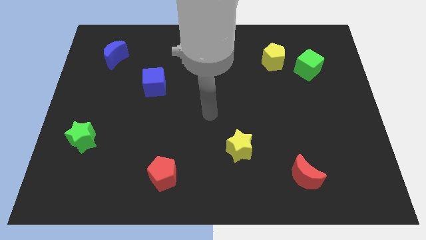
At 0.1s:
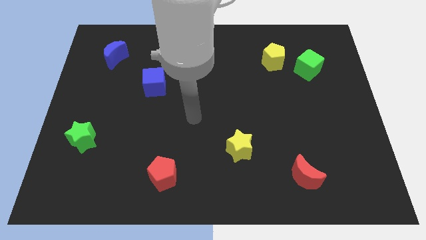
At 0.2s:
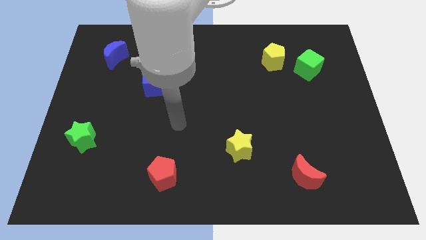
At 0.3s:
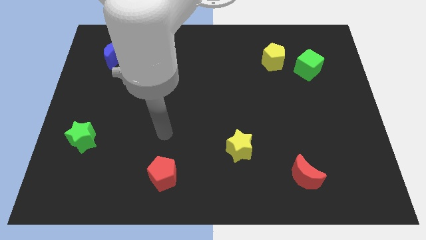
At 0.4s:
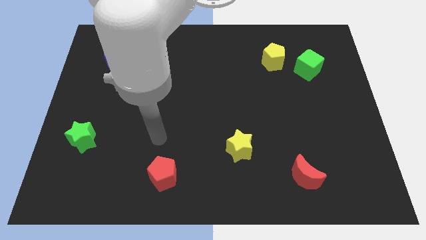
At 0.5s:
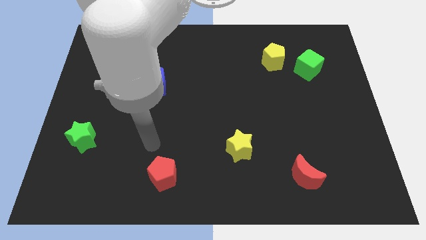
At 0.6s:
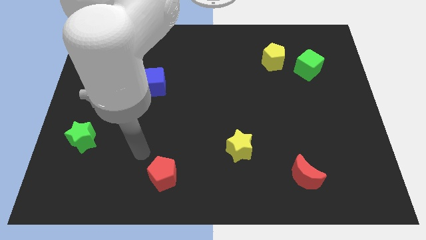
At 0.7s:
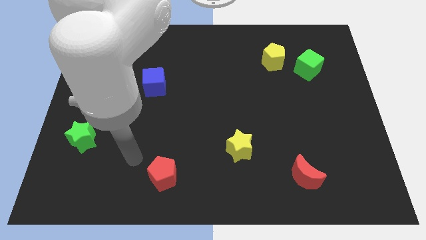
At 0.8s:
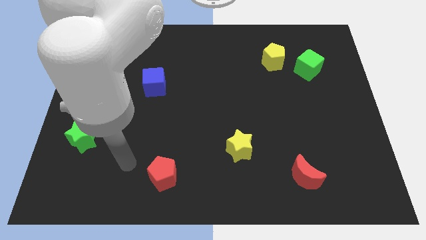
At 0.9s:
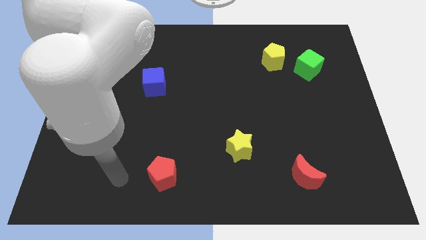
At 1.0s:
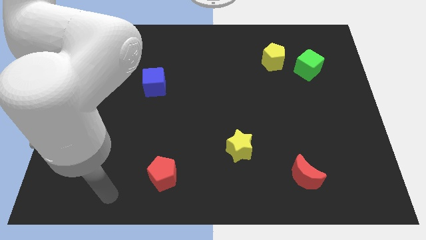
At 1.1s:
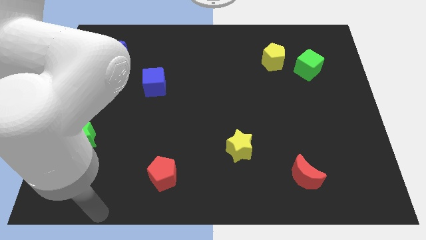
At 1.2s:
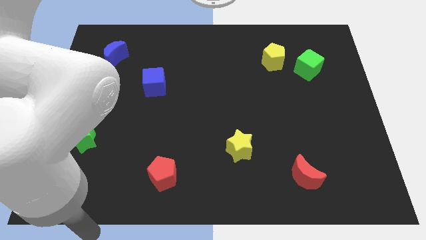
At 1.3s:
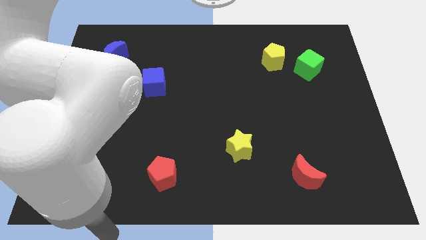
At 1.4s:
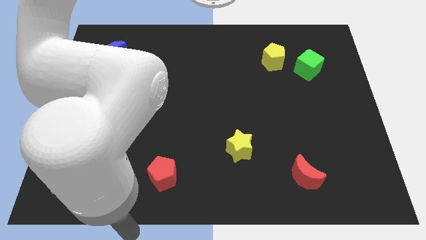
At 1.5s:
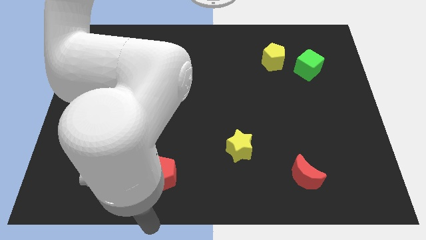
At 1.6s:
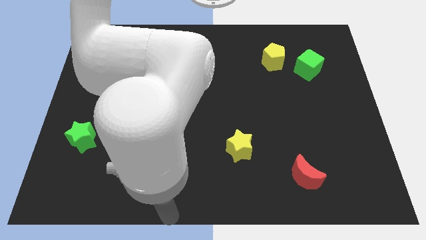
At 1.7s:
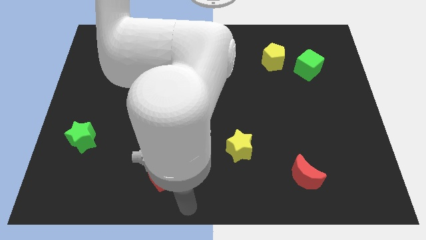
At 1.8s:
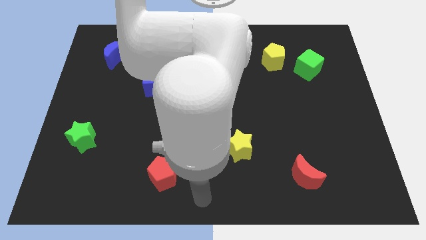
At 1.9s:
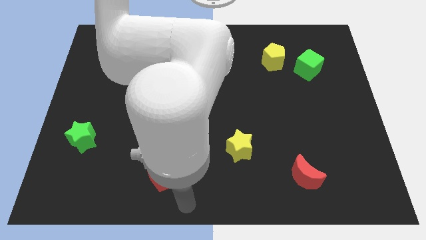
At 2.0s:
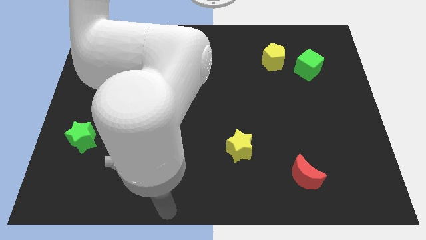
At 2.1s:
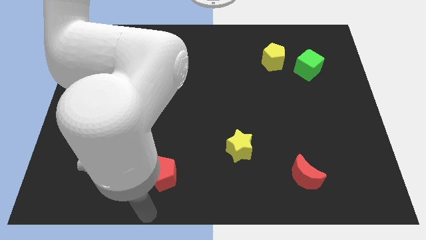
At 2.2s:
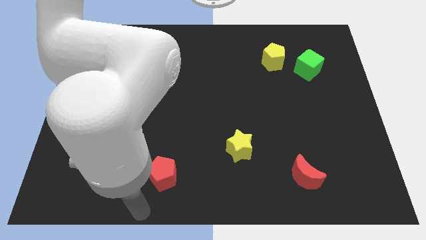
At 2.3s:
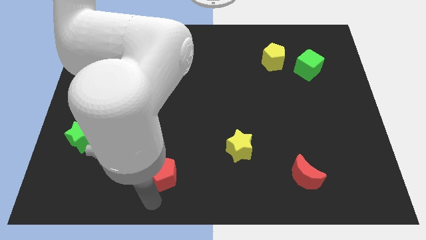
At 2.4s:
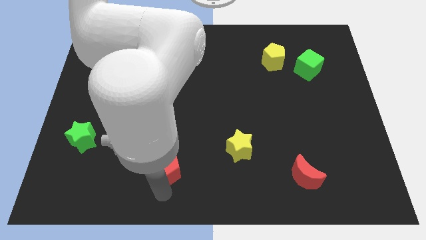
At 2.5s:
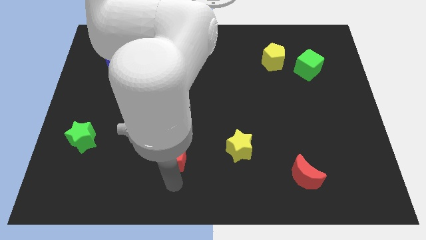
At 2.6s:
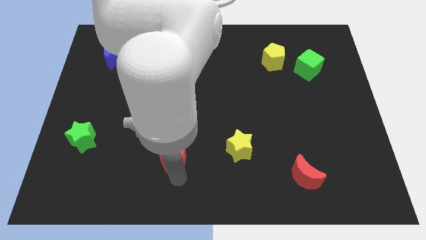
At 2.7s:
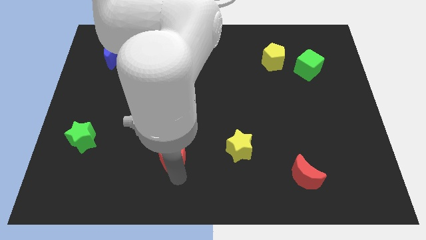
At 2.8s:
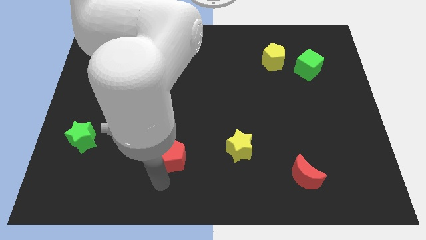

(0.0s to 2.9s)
move red pentagon slightly up

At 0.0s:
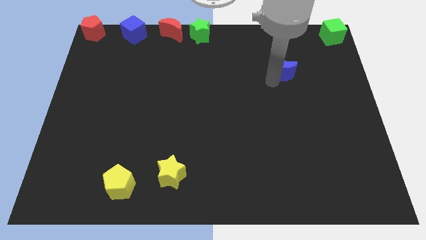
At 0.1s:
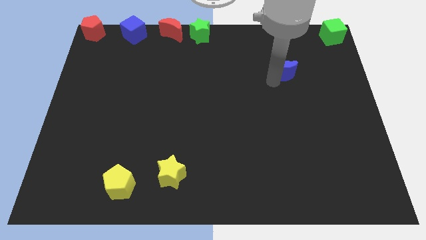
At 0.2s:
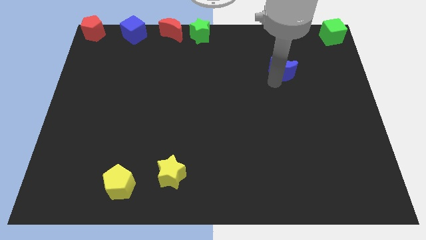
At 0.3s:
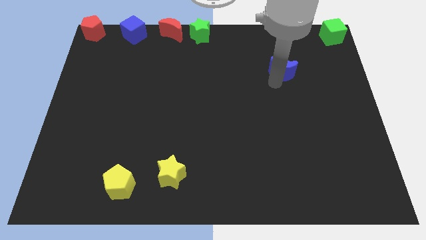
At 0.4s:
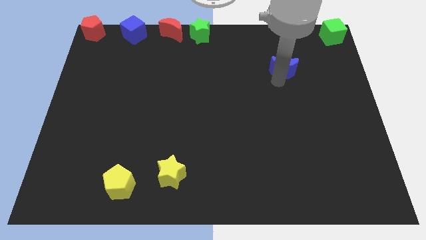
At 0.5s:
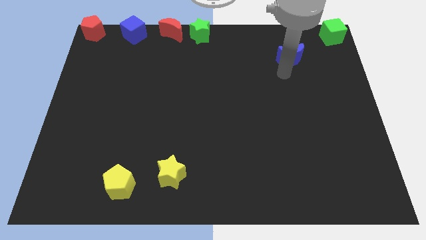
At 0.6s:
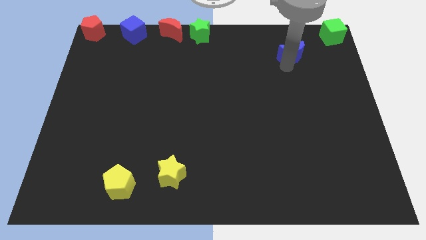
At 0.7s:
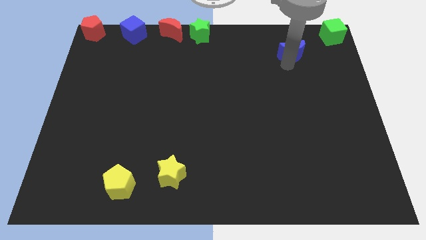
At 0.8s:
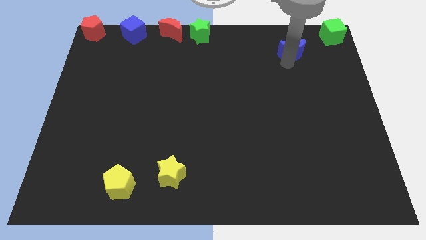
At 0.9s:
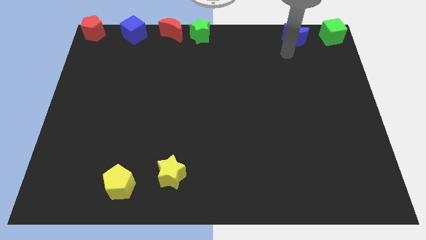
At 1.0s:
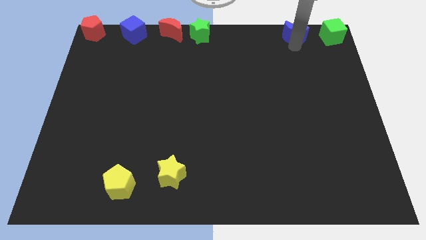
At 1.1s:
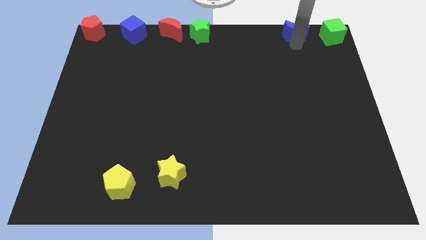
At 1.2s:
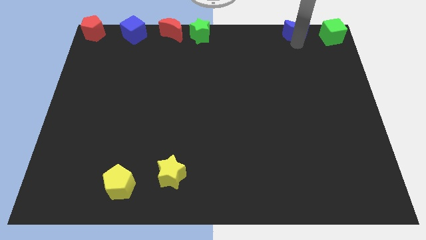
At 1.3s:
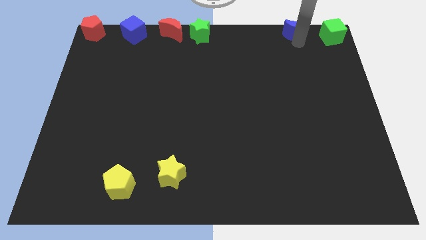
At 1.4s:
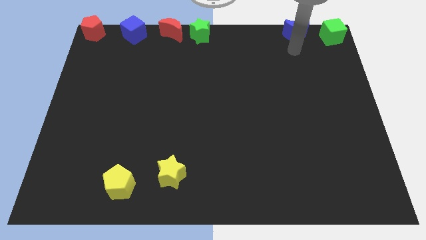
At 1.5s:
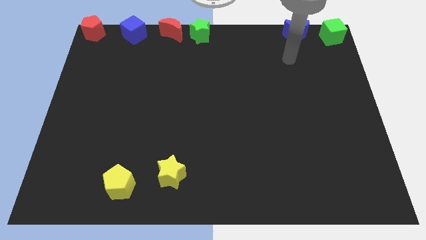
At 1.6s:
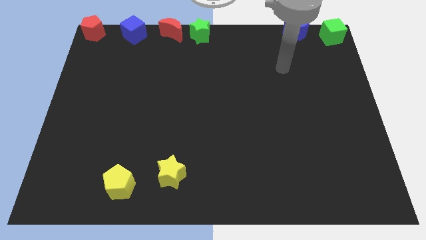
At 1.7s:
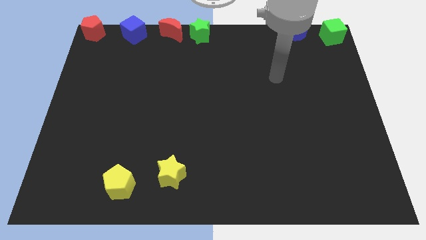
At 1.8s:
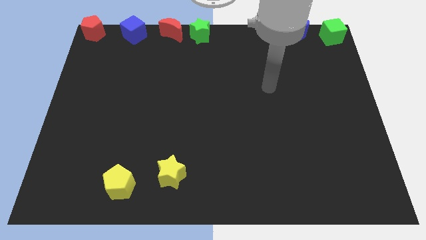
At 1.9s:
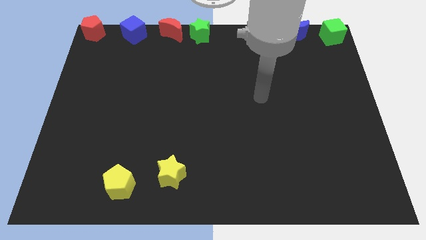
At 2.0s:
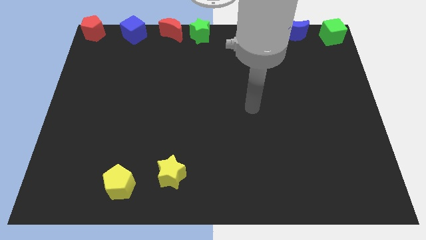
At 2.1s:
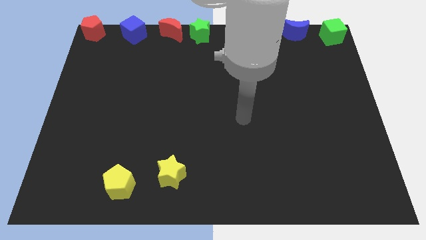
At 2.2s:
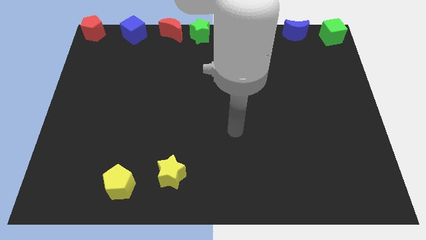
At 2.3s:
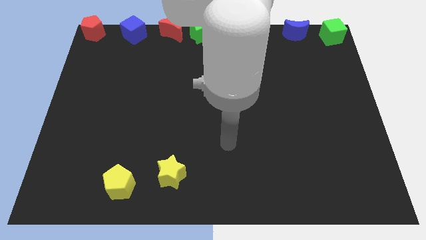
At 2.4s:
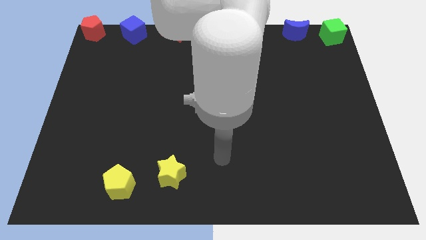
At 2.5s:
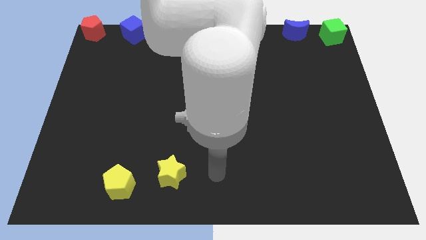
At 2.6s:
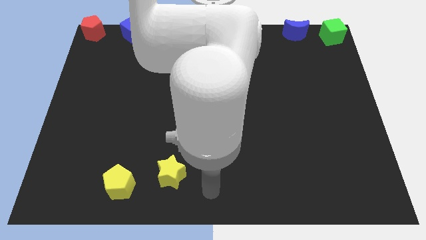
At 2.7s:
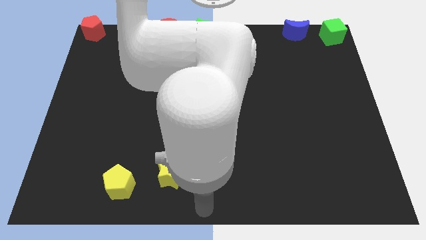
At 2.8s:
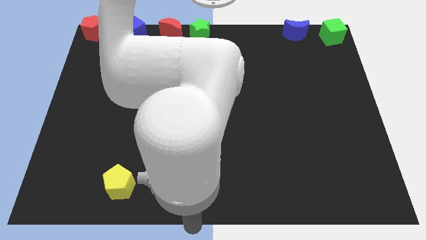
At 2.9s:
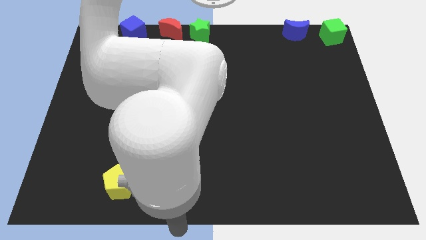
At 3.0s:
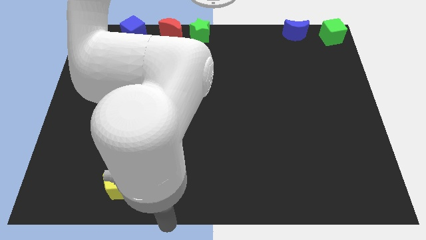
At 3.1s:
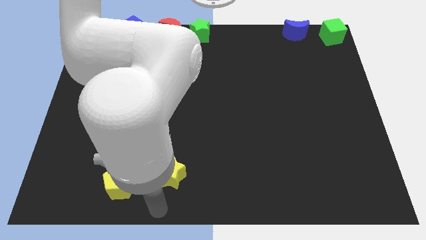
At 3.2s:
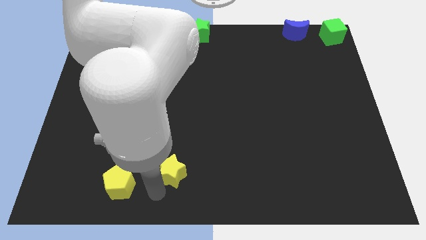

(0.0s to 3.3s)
put the blue moon to the left side of the green cube

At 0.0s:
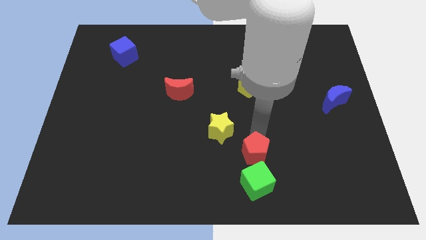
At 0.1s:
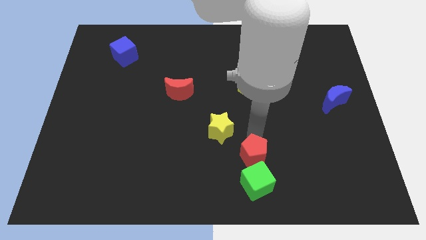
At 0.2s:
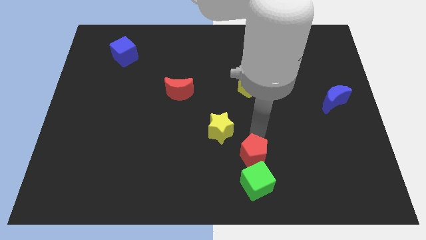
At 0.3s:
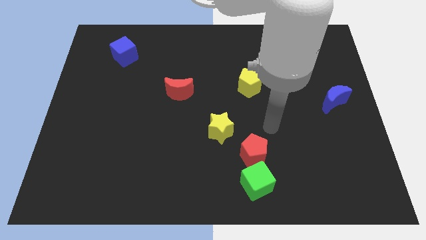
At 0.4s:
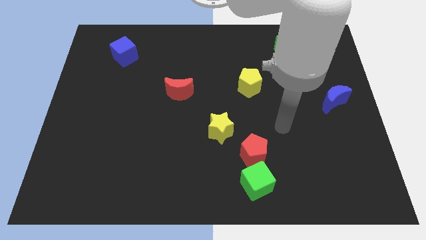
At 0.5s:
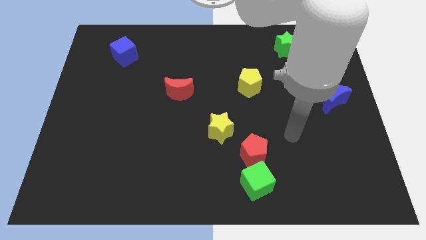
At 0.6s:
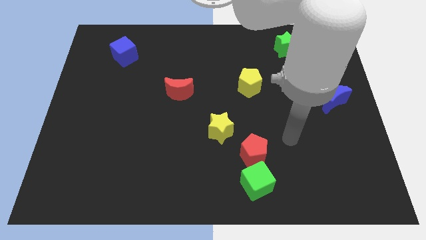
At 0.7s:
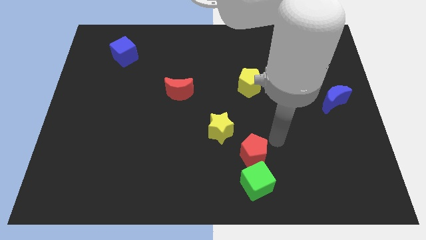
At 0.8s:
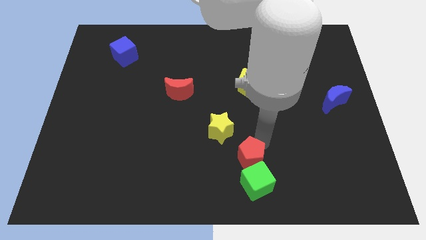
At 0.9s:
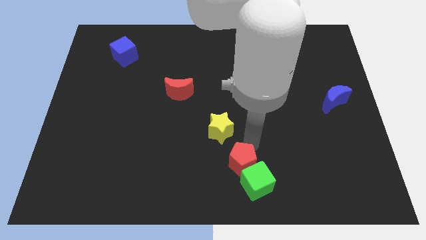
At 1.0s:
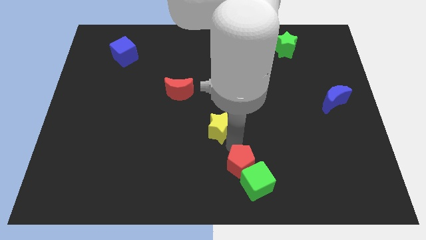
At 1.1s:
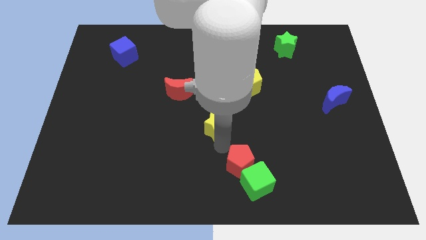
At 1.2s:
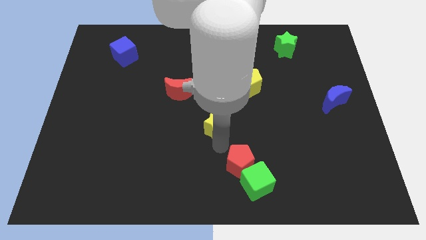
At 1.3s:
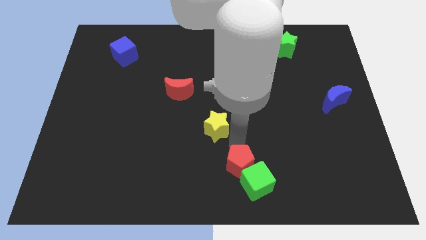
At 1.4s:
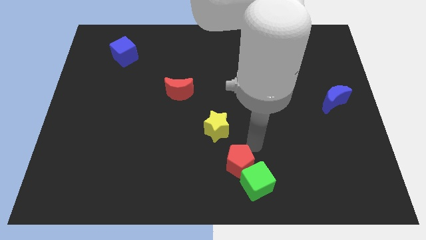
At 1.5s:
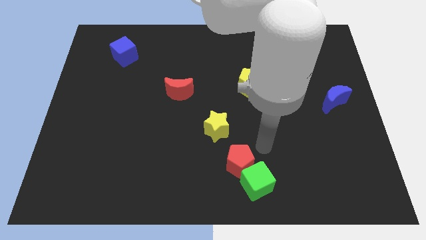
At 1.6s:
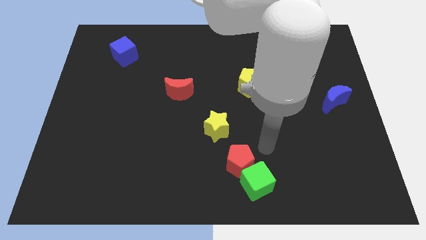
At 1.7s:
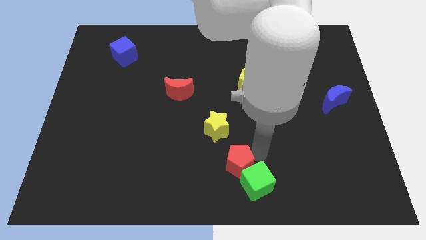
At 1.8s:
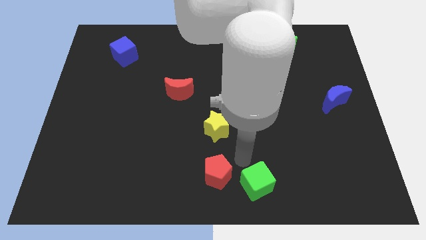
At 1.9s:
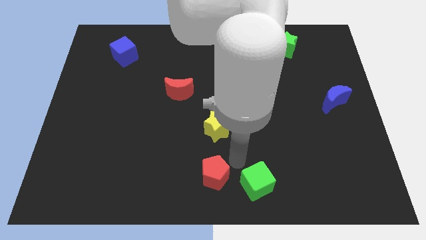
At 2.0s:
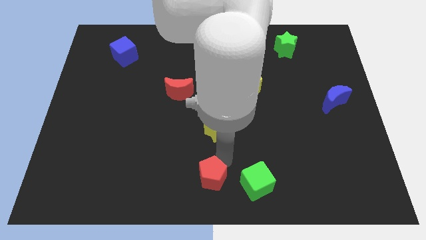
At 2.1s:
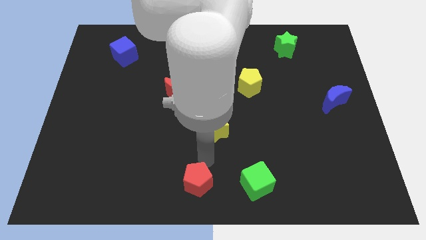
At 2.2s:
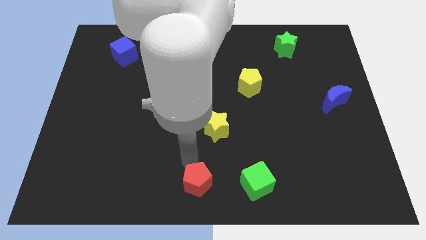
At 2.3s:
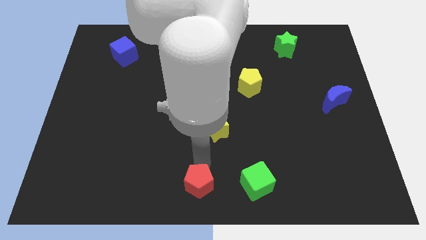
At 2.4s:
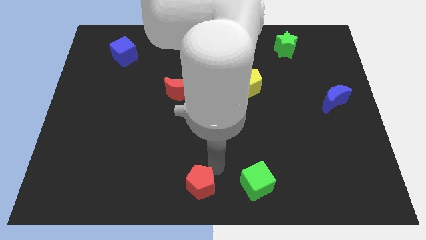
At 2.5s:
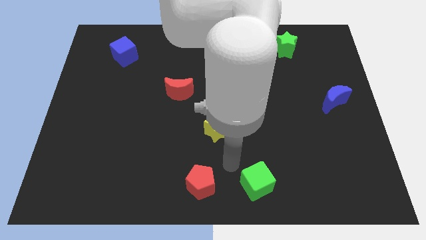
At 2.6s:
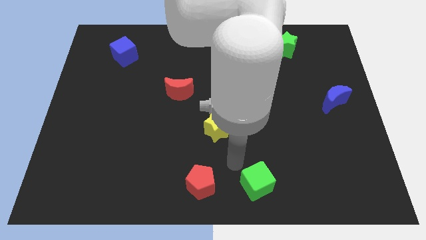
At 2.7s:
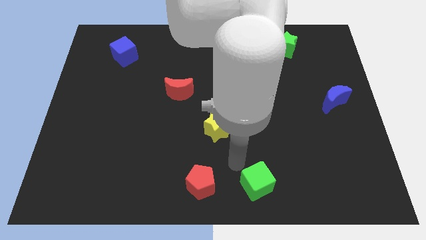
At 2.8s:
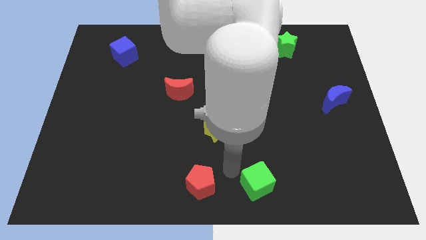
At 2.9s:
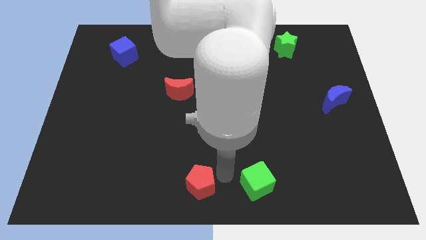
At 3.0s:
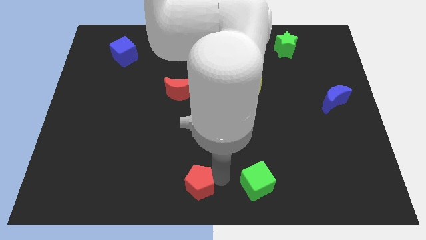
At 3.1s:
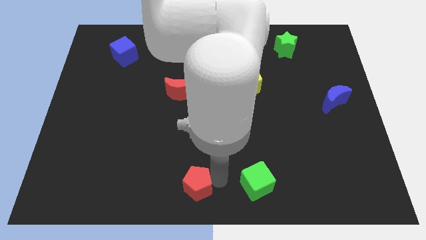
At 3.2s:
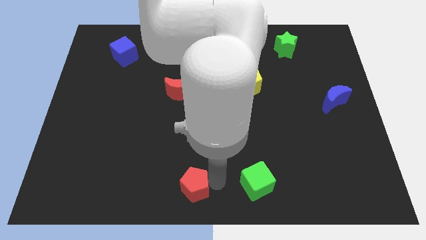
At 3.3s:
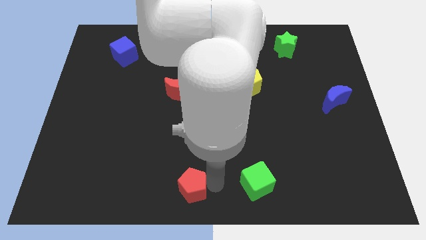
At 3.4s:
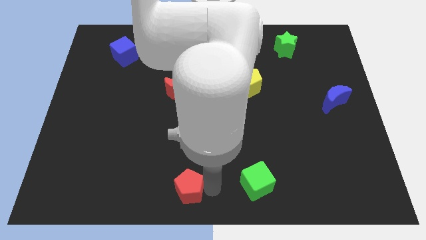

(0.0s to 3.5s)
move the red pentagon to the left side of the green cube
